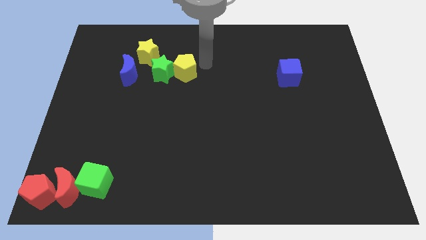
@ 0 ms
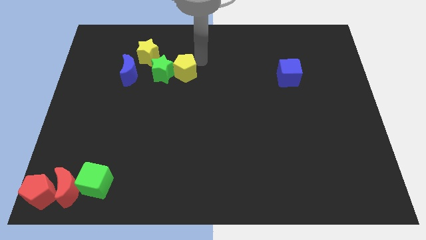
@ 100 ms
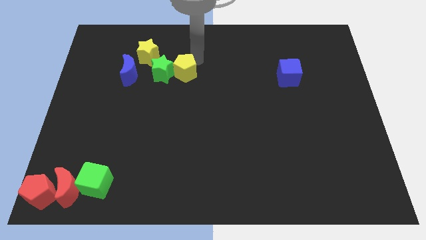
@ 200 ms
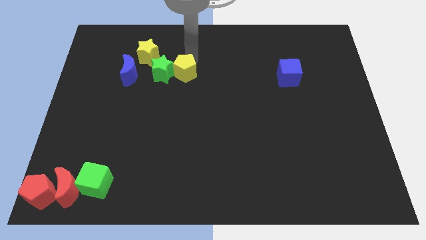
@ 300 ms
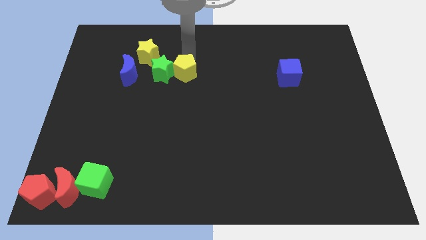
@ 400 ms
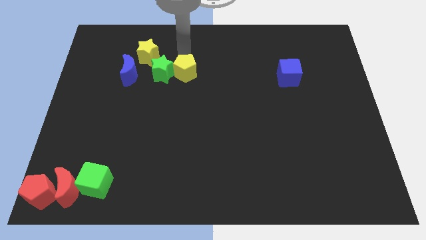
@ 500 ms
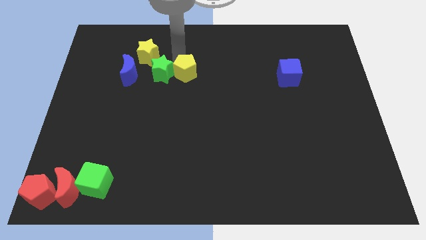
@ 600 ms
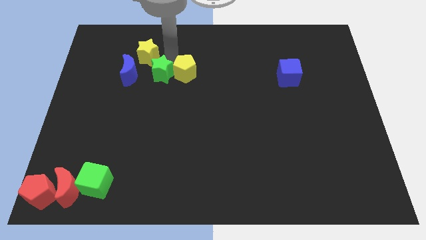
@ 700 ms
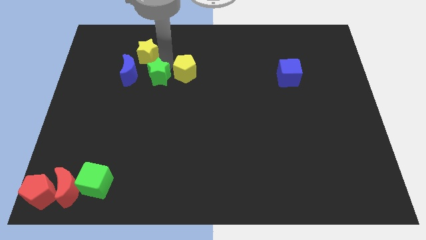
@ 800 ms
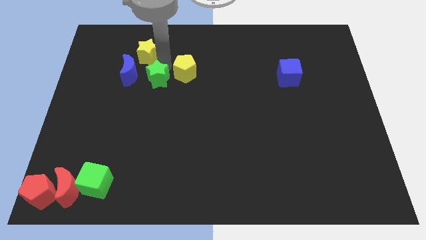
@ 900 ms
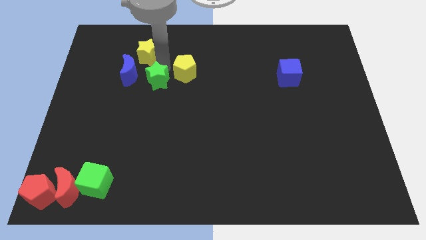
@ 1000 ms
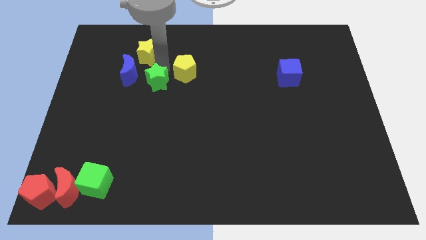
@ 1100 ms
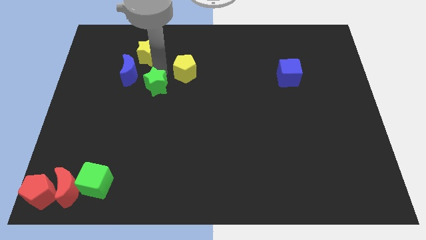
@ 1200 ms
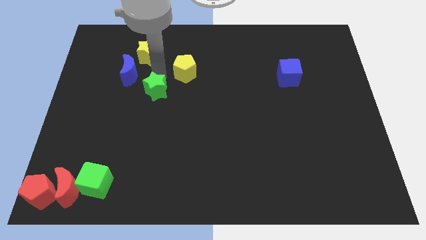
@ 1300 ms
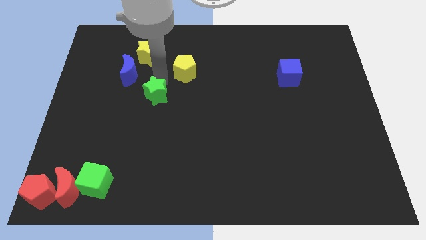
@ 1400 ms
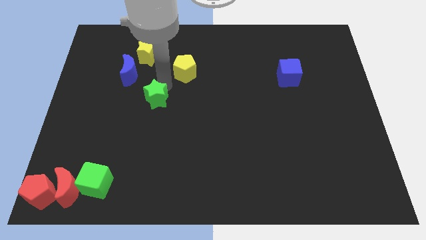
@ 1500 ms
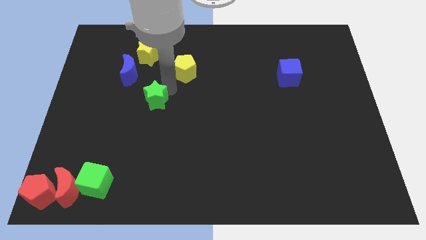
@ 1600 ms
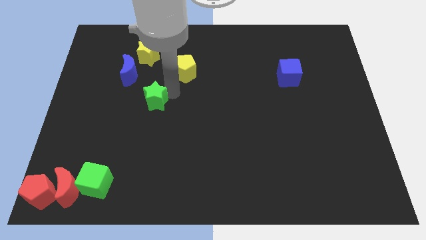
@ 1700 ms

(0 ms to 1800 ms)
push the green star away from the yellow pentagon

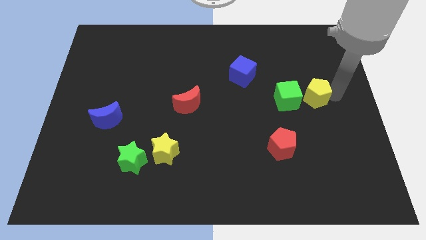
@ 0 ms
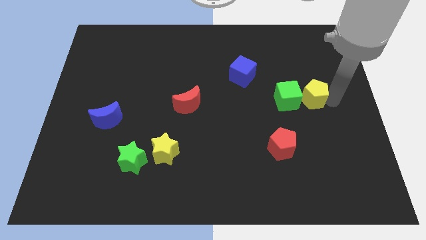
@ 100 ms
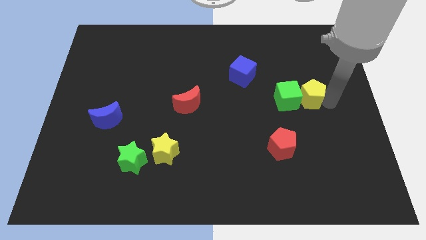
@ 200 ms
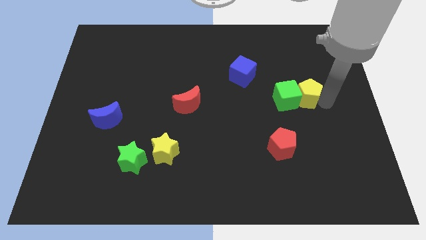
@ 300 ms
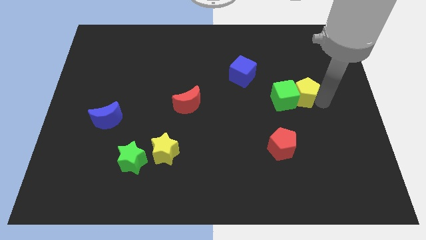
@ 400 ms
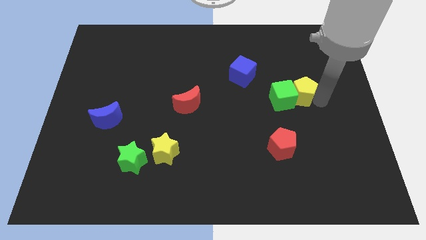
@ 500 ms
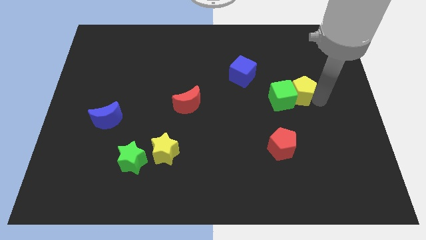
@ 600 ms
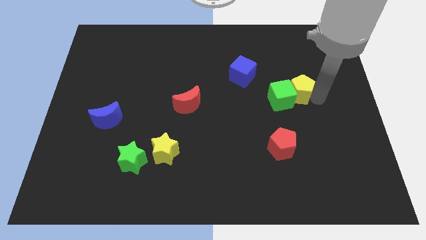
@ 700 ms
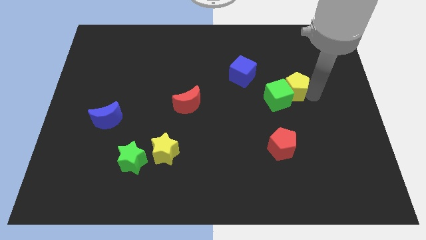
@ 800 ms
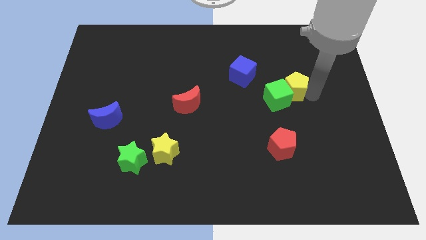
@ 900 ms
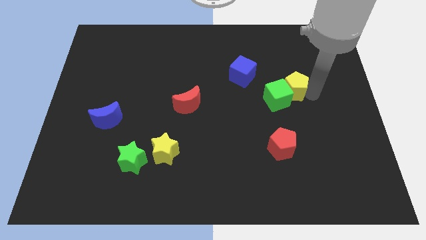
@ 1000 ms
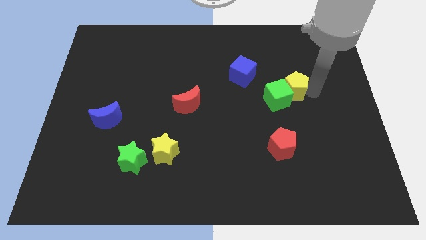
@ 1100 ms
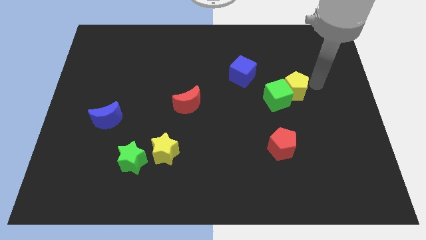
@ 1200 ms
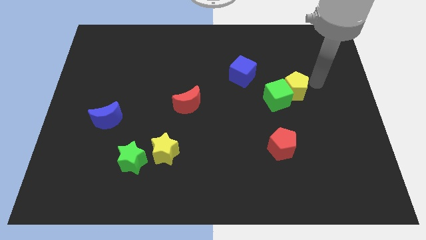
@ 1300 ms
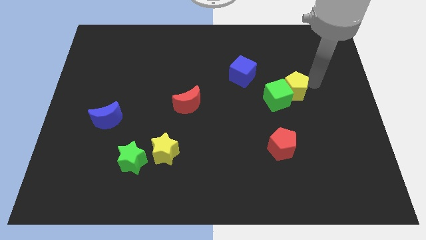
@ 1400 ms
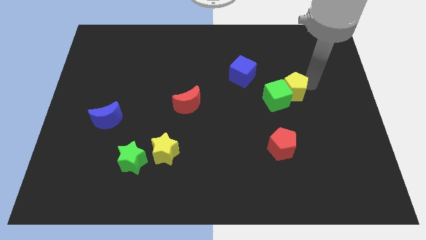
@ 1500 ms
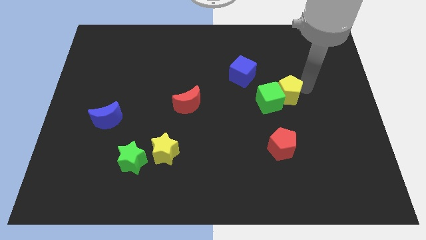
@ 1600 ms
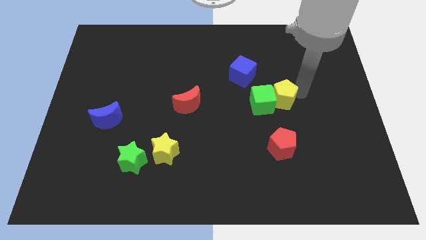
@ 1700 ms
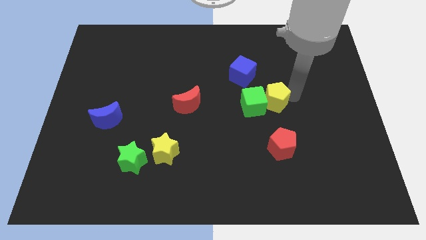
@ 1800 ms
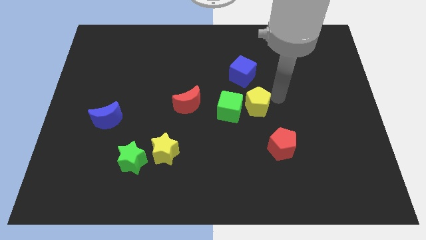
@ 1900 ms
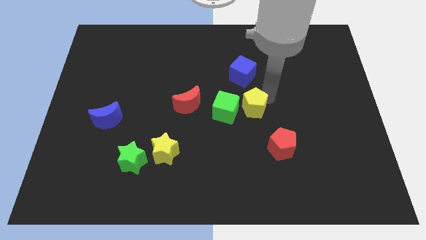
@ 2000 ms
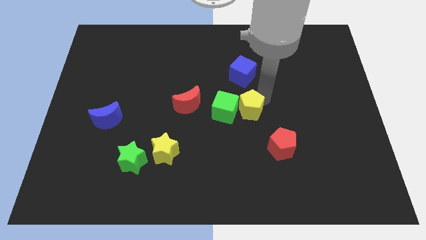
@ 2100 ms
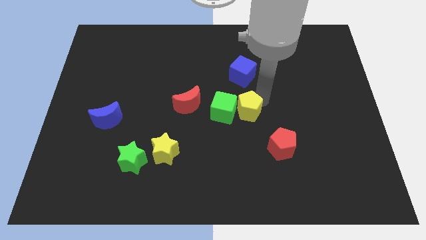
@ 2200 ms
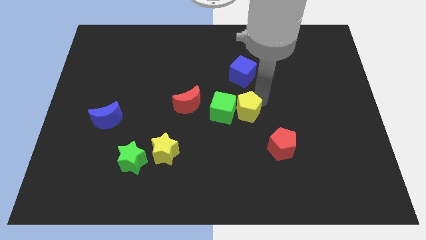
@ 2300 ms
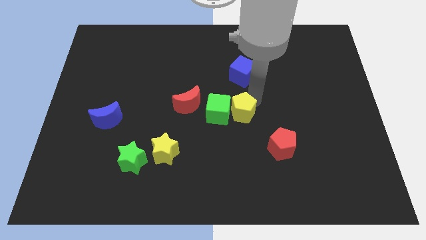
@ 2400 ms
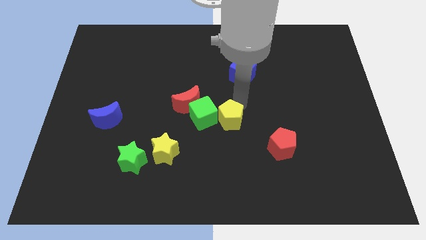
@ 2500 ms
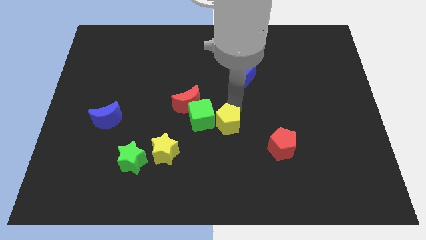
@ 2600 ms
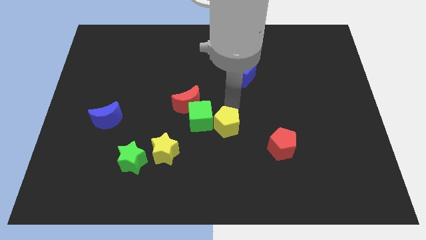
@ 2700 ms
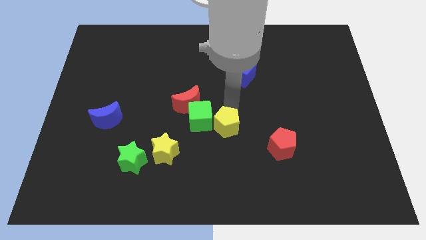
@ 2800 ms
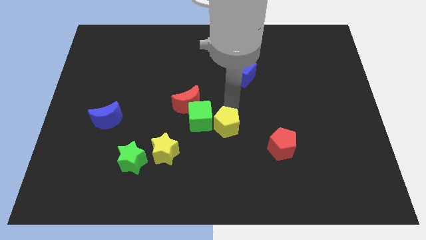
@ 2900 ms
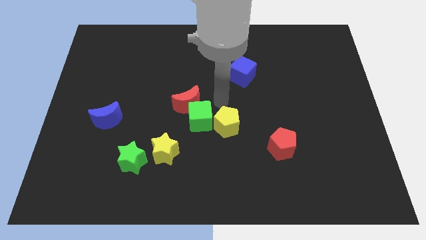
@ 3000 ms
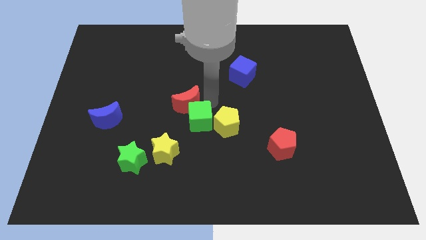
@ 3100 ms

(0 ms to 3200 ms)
push the green cube with the yellow pentagon towards the the bottom center of the board

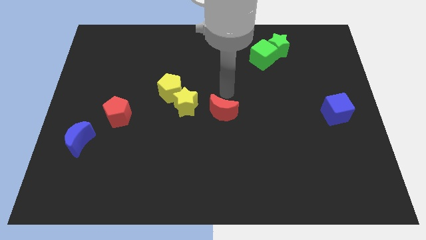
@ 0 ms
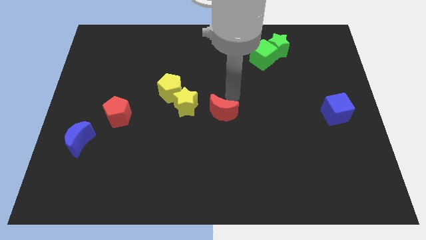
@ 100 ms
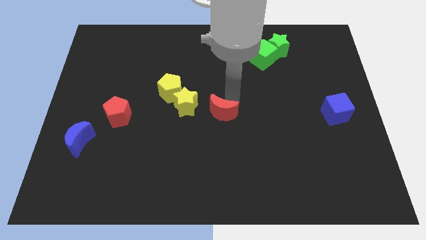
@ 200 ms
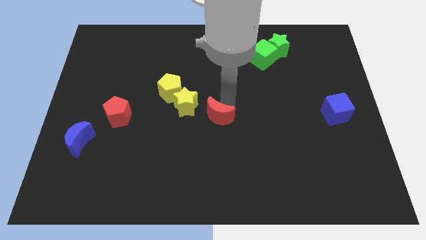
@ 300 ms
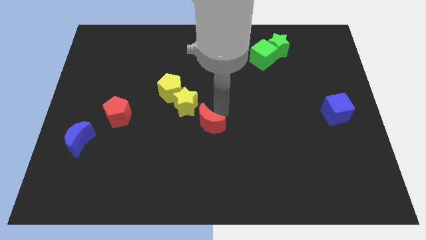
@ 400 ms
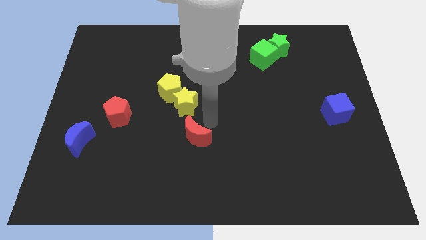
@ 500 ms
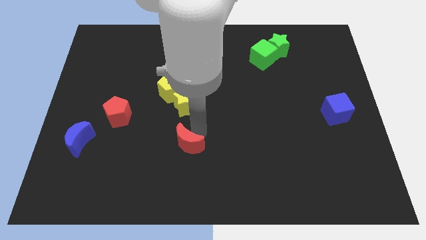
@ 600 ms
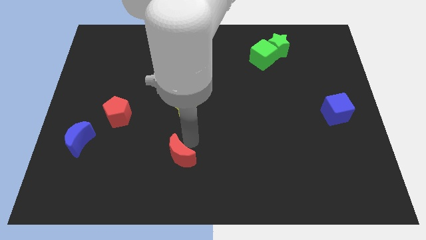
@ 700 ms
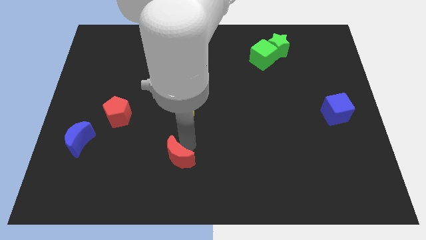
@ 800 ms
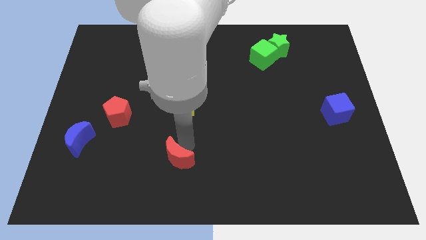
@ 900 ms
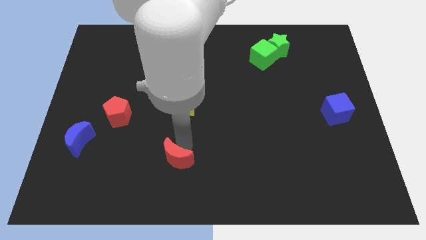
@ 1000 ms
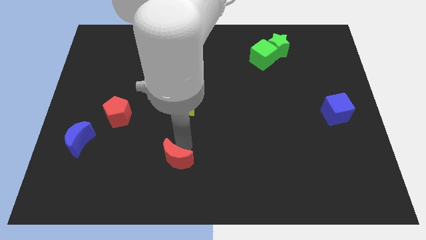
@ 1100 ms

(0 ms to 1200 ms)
place the red crescent vertically to the yellow star

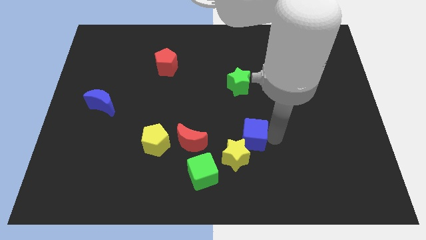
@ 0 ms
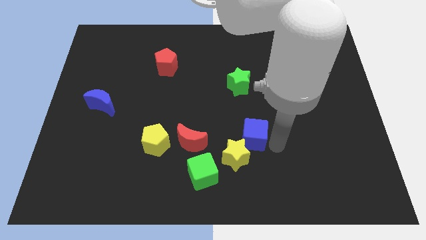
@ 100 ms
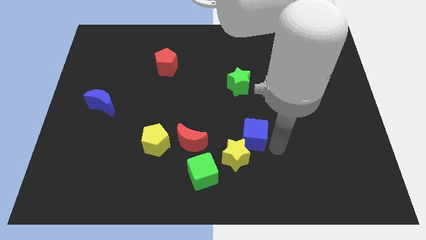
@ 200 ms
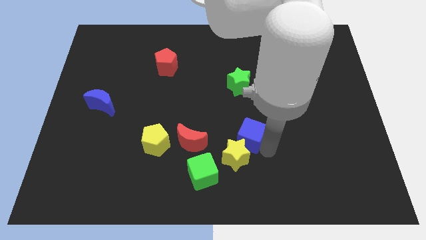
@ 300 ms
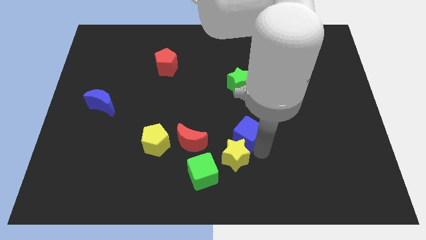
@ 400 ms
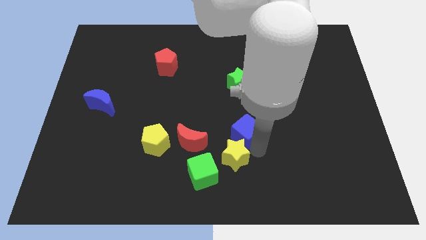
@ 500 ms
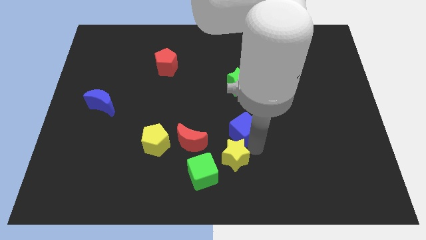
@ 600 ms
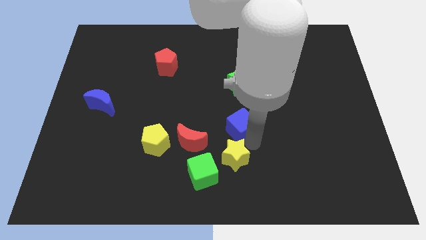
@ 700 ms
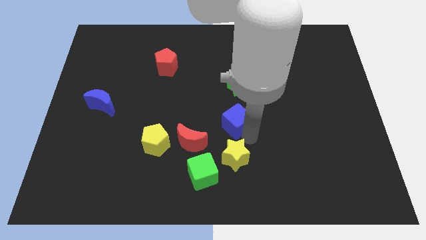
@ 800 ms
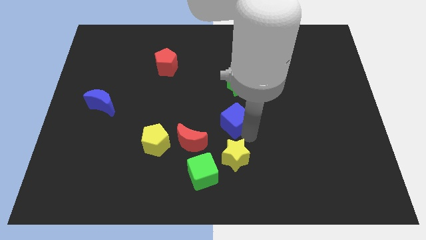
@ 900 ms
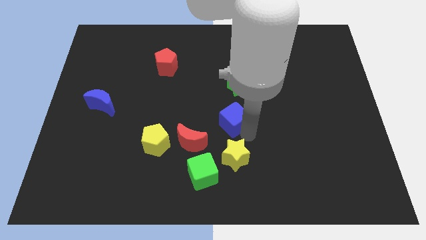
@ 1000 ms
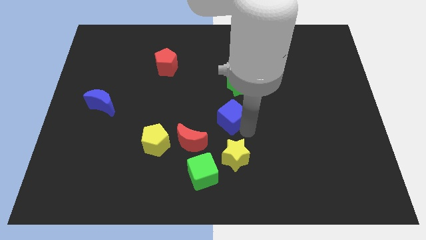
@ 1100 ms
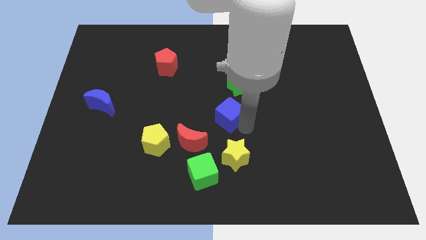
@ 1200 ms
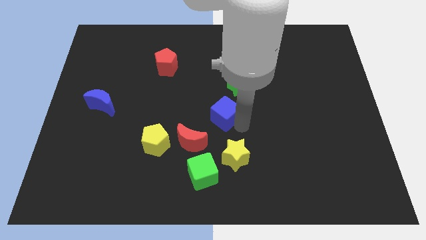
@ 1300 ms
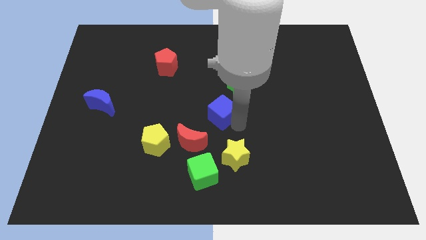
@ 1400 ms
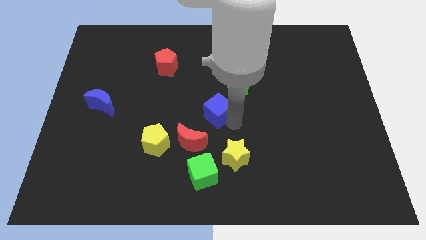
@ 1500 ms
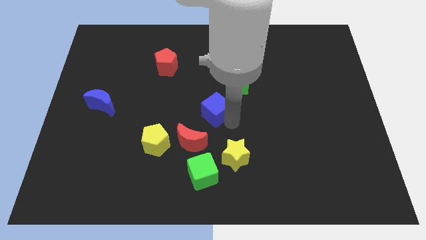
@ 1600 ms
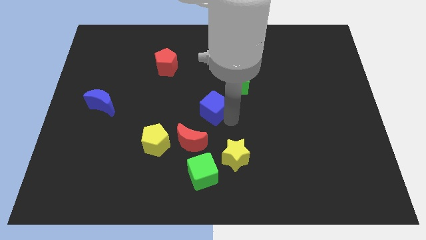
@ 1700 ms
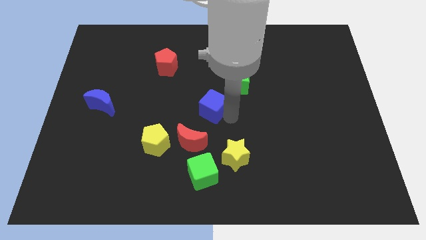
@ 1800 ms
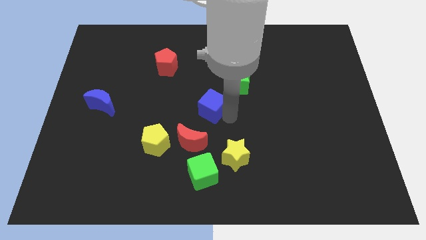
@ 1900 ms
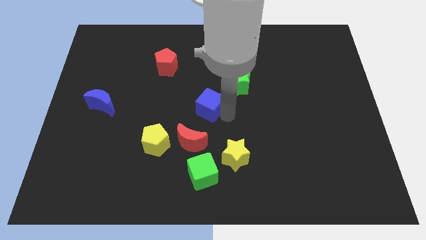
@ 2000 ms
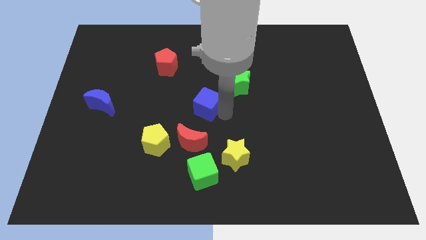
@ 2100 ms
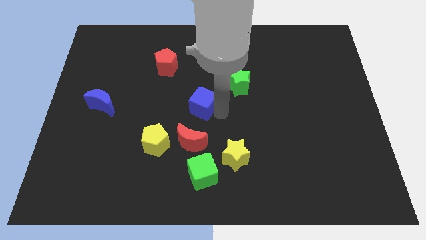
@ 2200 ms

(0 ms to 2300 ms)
push blue cube above red crescent

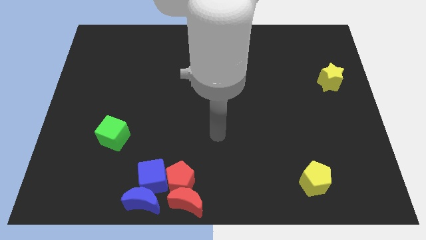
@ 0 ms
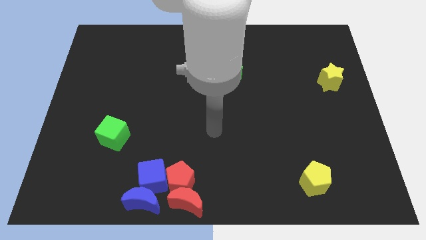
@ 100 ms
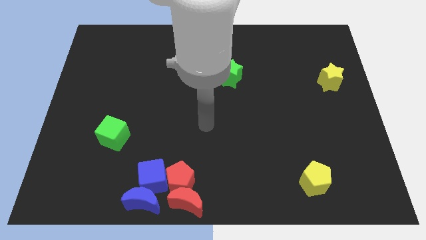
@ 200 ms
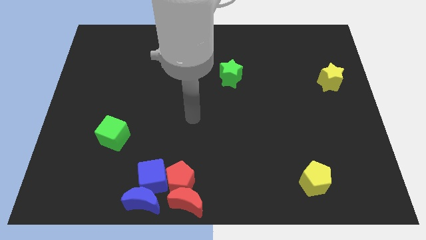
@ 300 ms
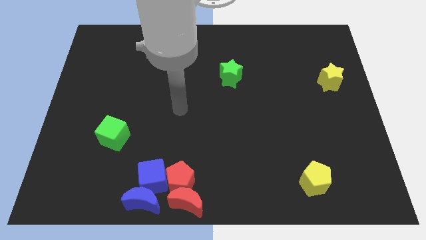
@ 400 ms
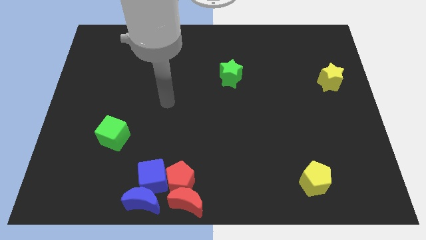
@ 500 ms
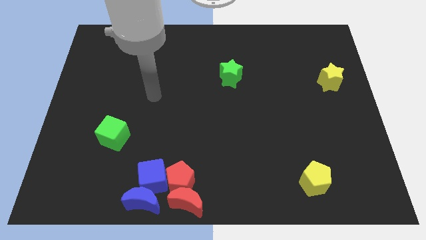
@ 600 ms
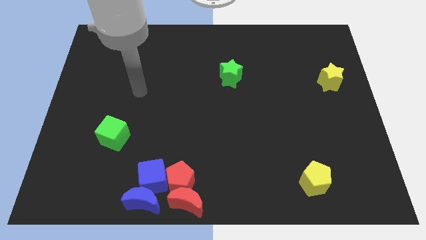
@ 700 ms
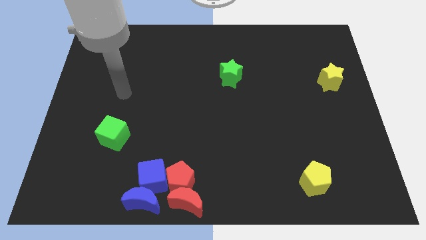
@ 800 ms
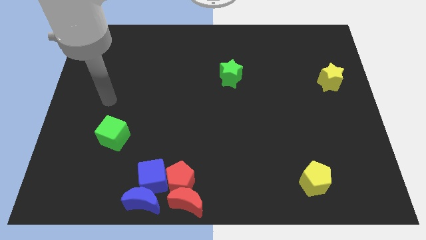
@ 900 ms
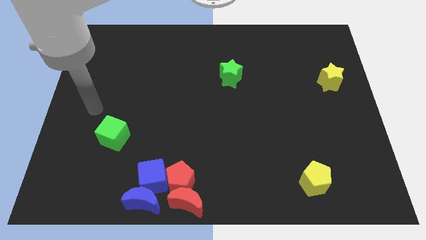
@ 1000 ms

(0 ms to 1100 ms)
move the arm towards the top of the green cube
